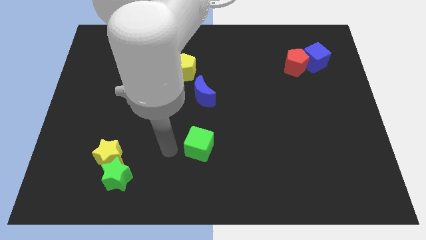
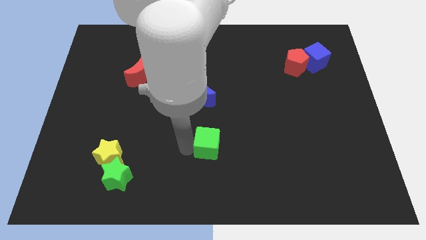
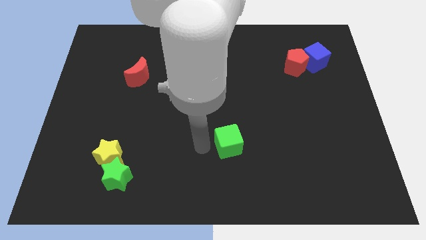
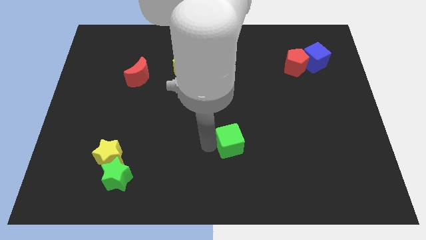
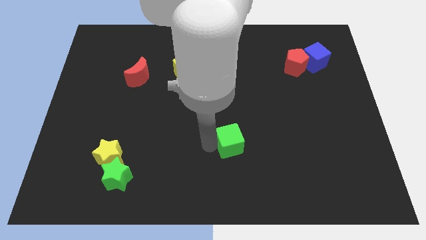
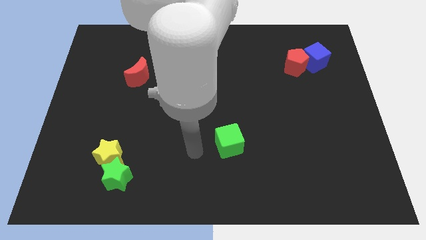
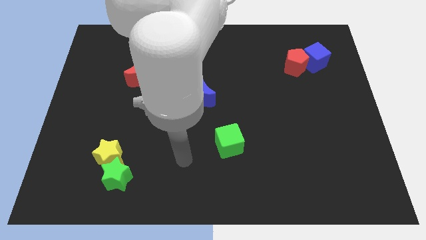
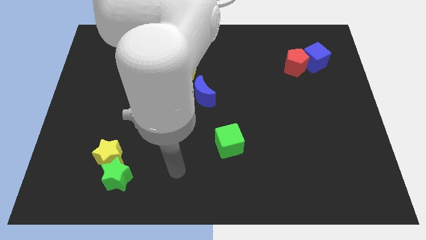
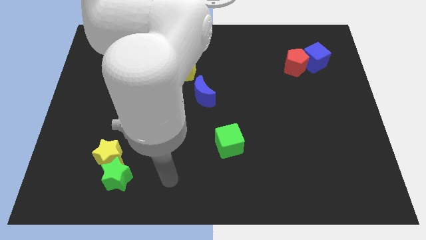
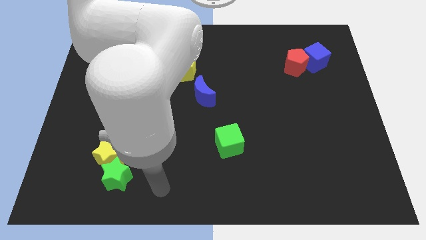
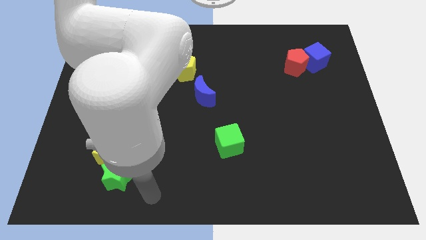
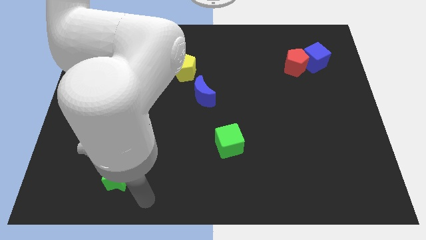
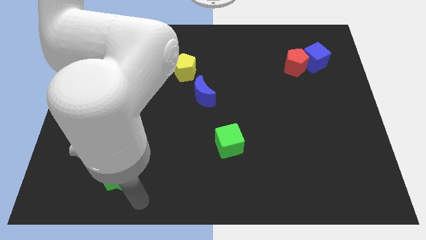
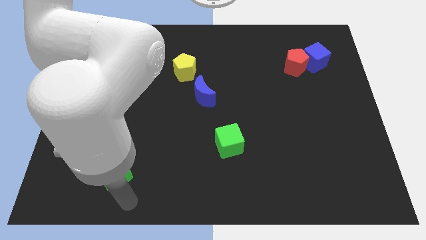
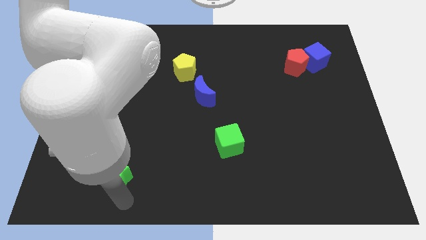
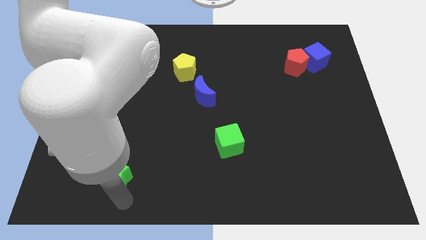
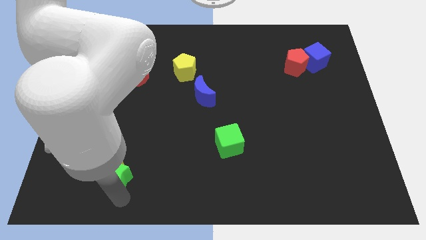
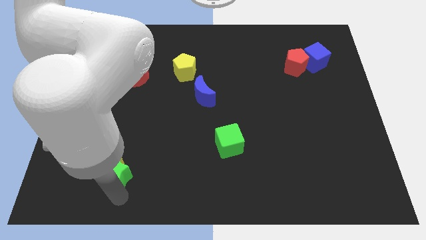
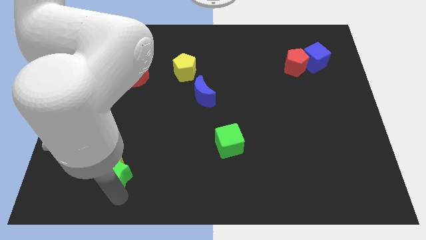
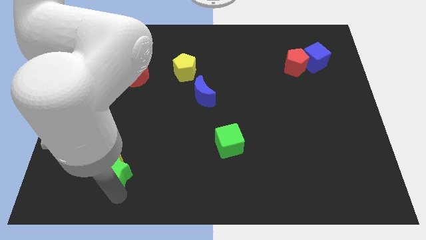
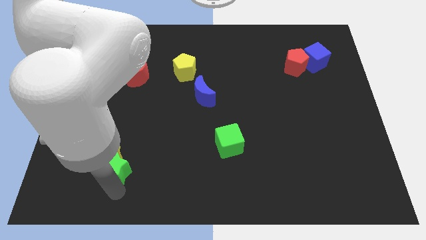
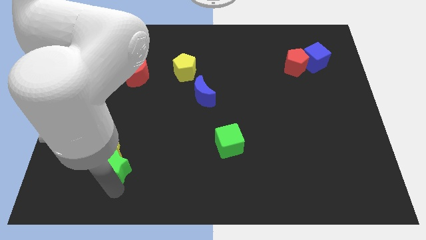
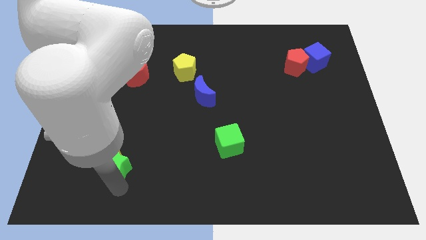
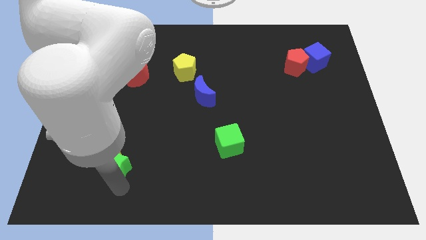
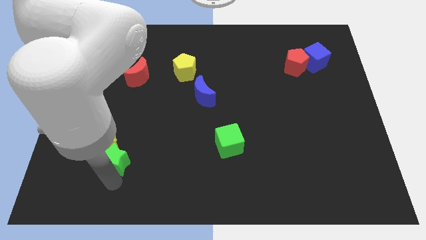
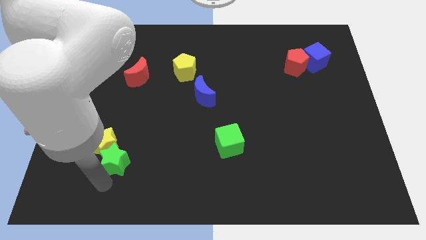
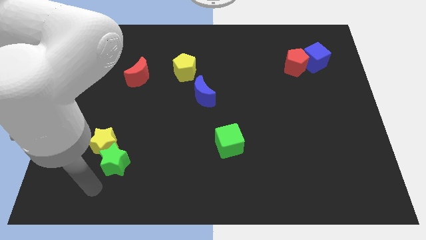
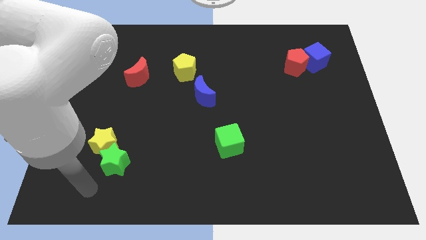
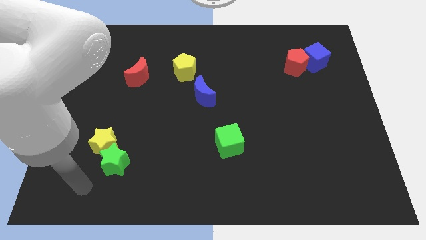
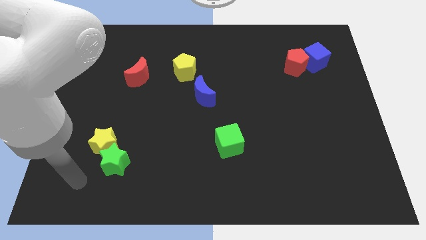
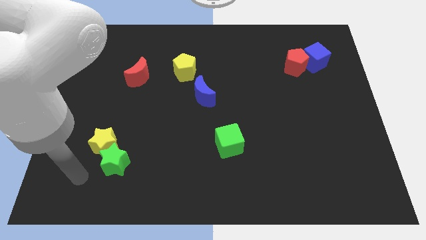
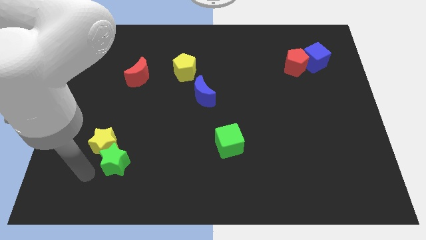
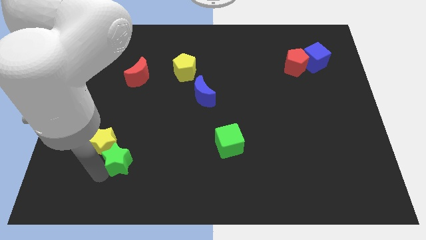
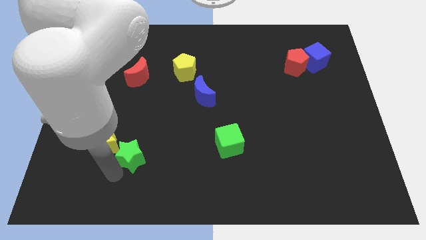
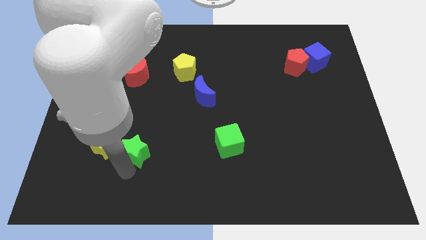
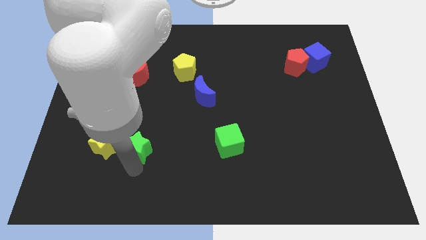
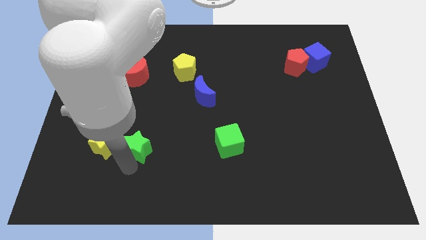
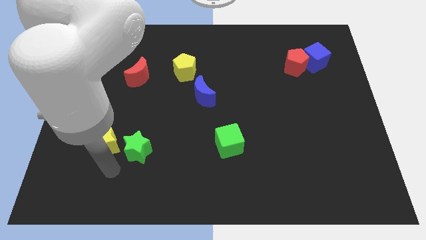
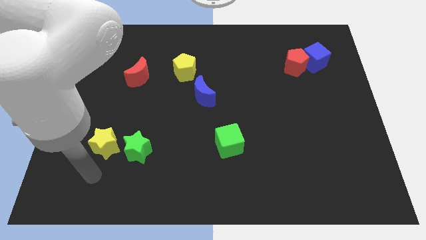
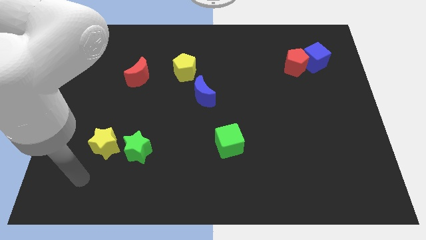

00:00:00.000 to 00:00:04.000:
push the green star into the yellow star

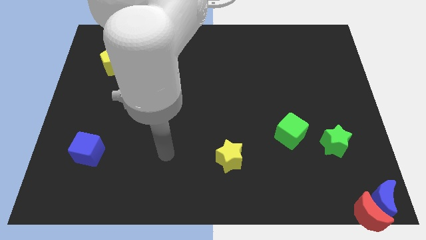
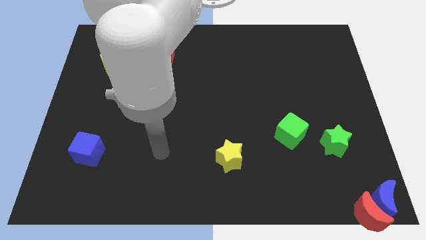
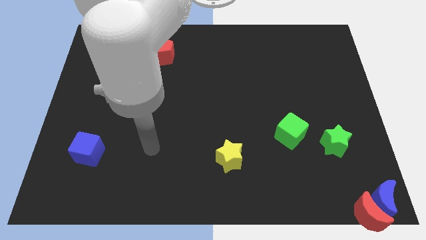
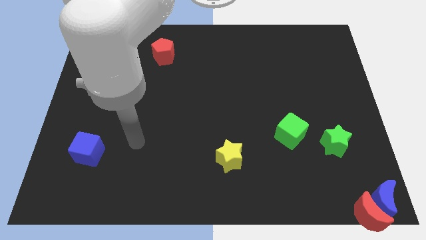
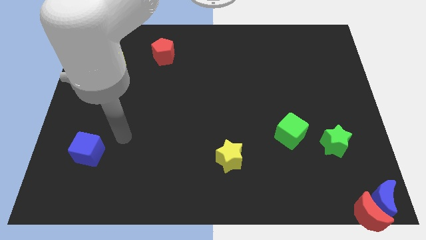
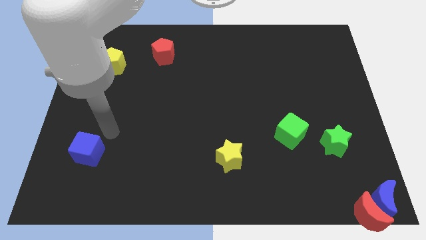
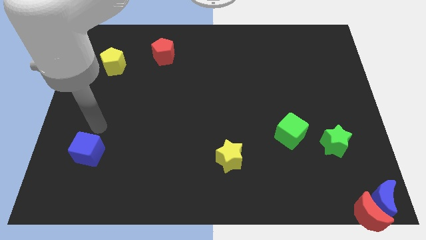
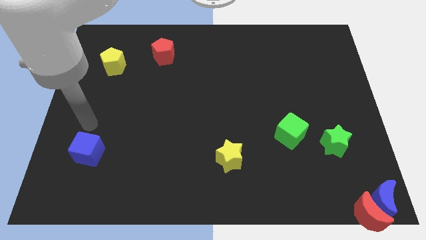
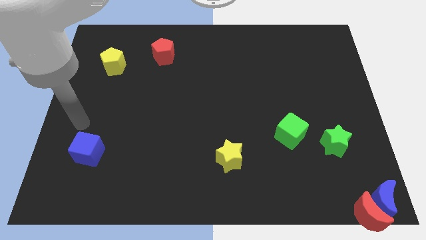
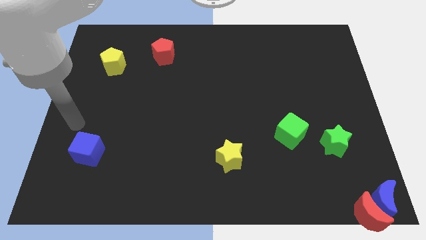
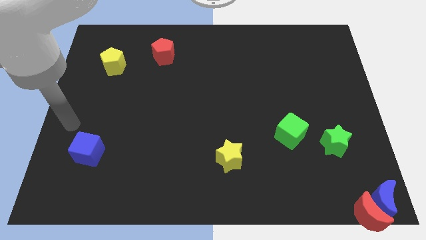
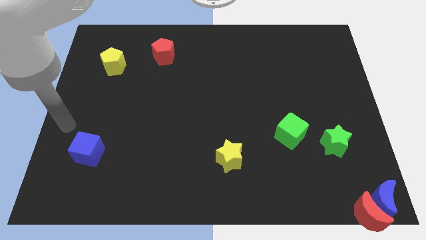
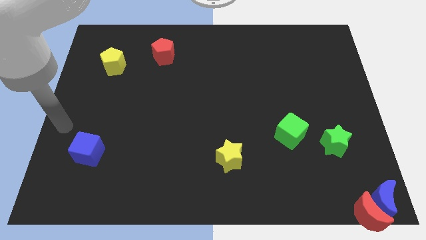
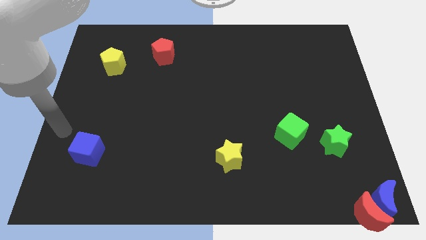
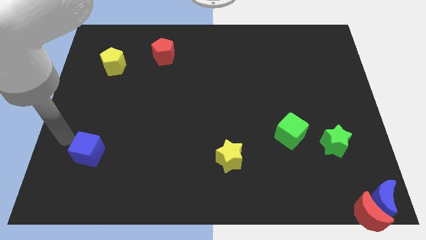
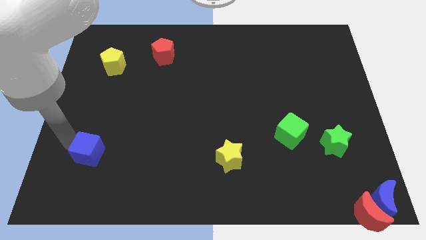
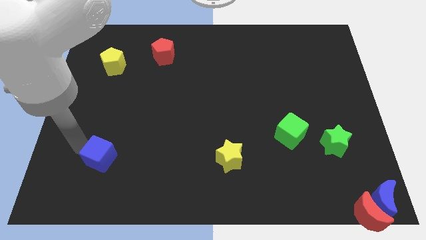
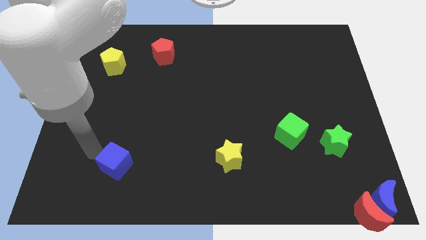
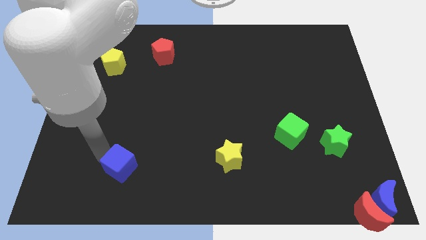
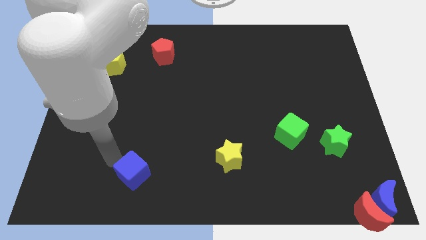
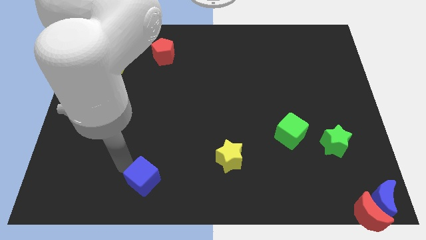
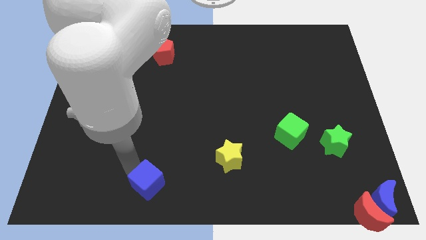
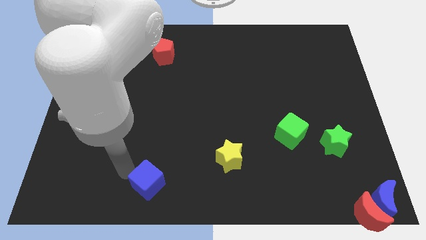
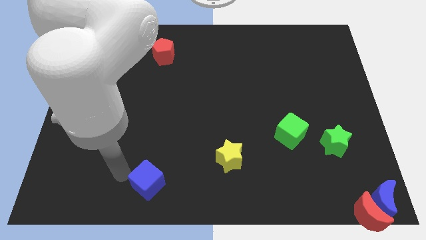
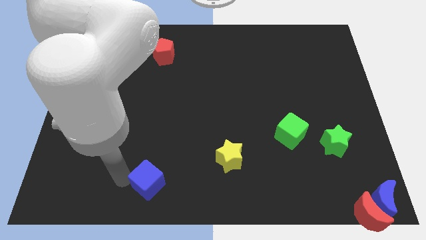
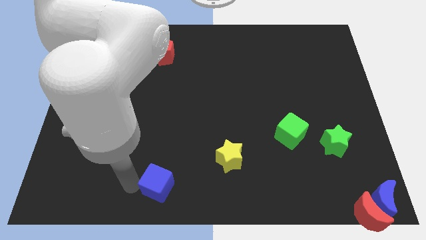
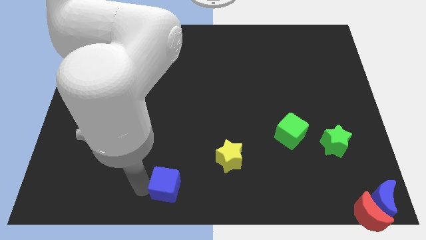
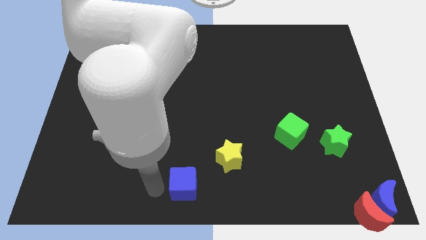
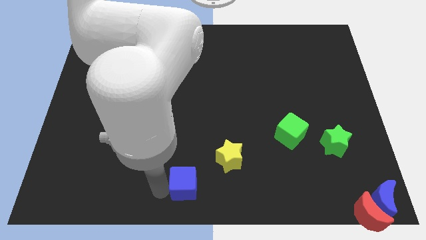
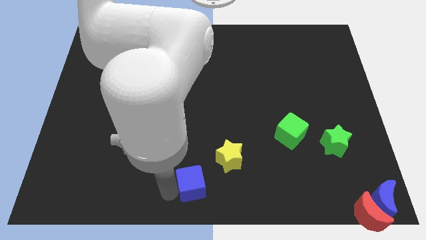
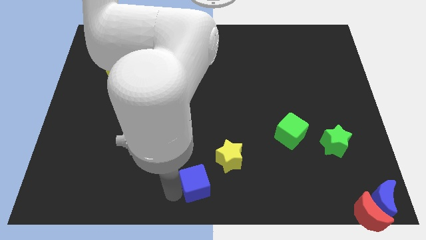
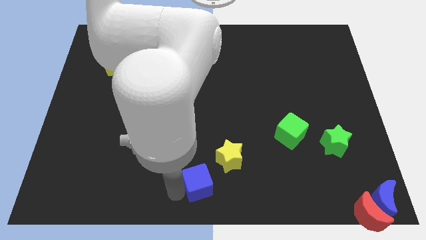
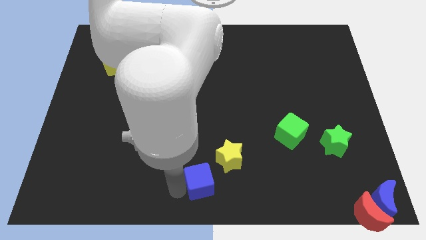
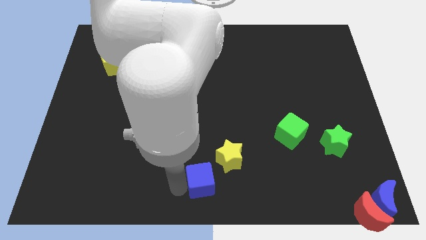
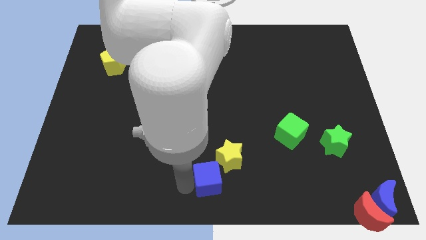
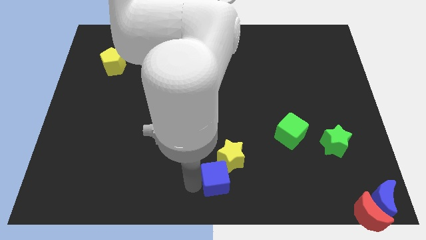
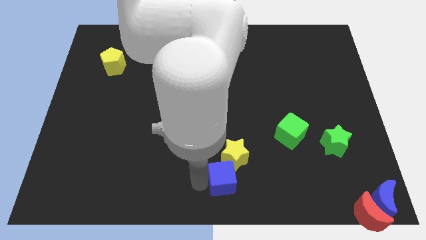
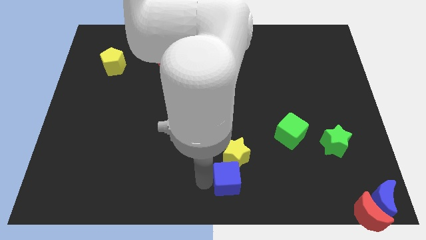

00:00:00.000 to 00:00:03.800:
push the blue cube into the yellow star

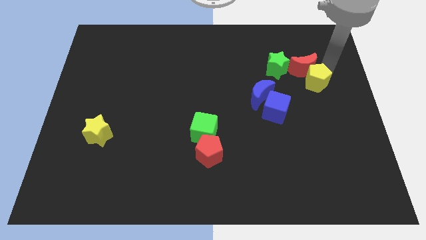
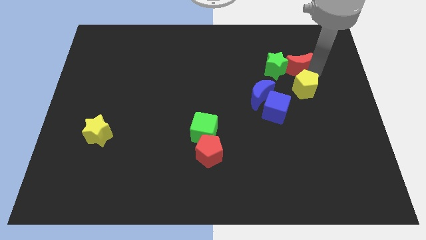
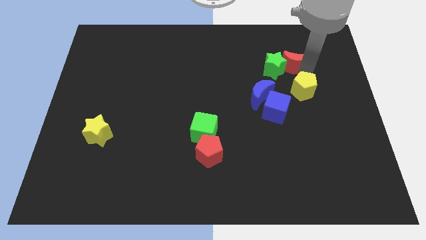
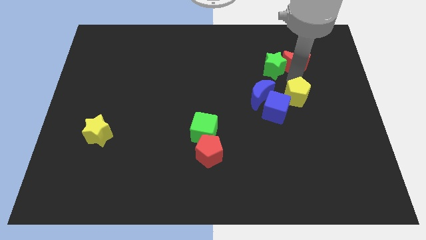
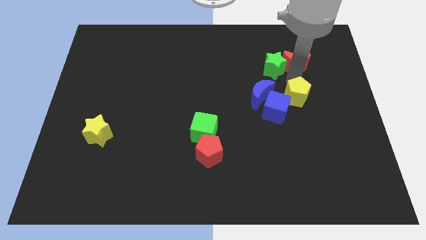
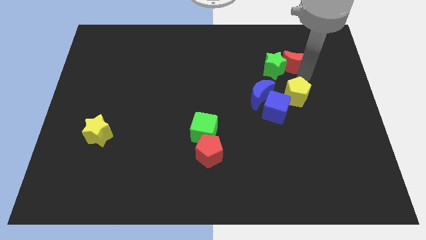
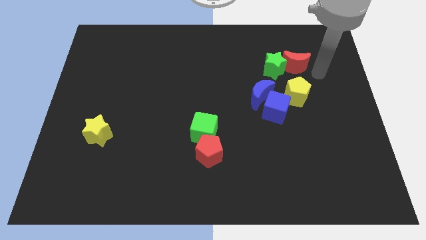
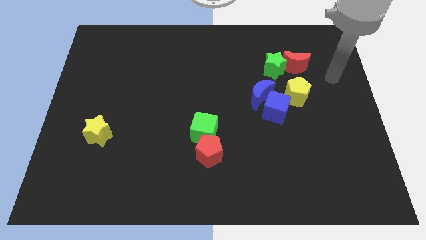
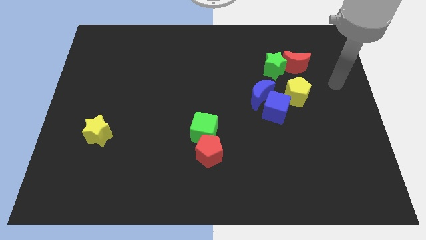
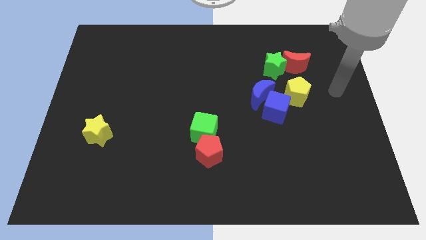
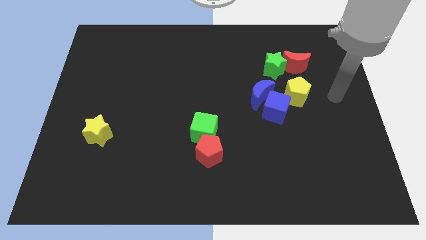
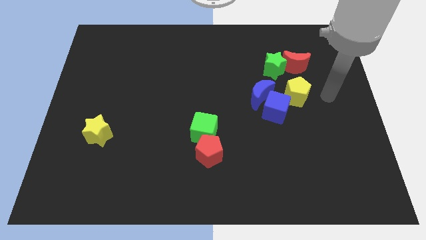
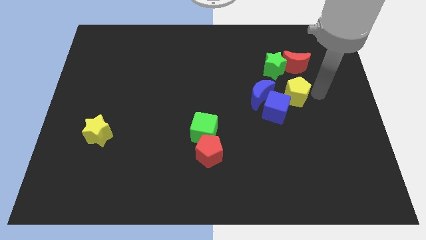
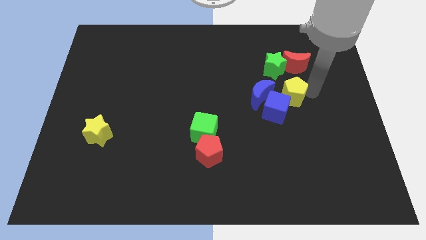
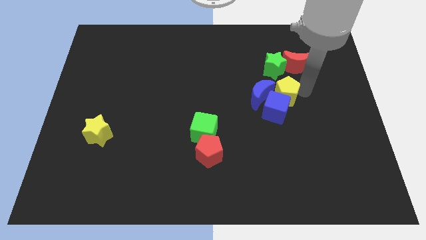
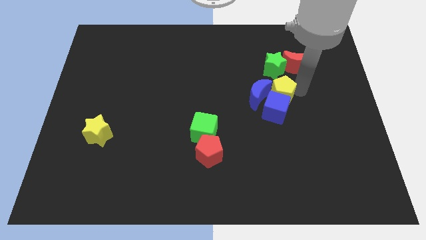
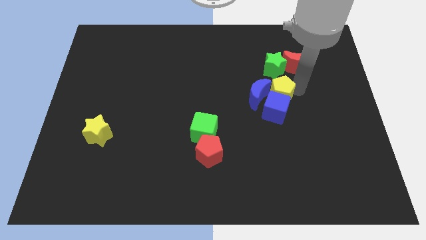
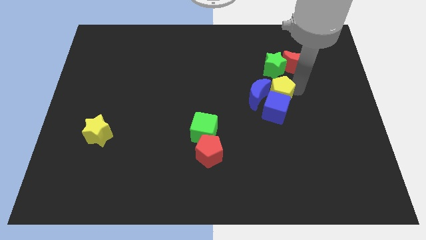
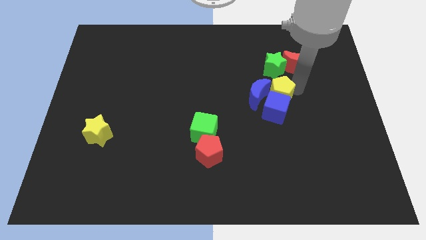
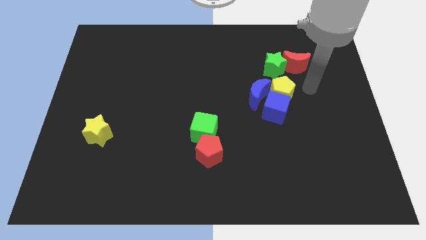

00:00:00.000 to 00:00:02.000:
place the yellow pentagon to the right of blue crescent
